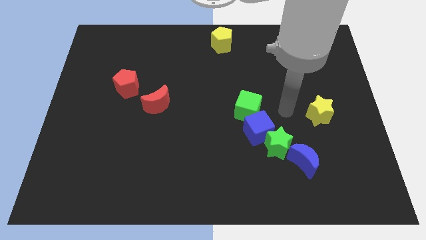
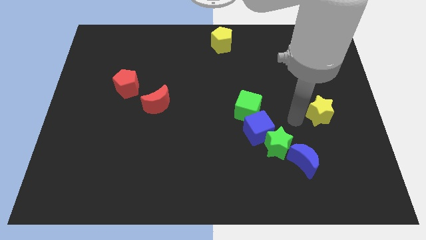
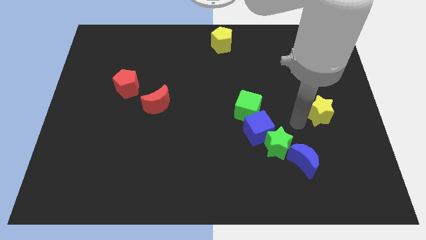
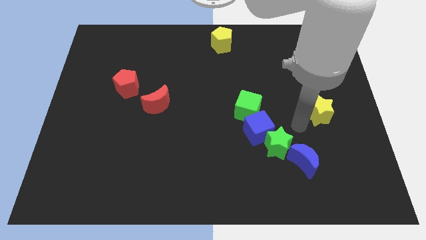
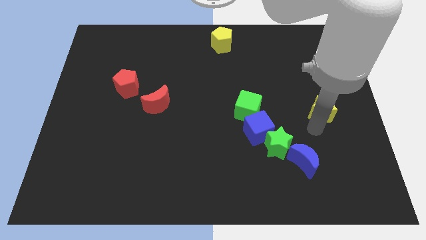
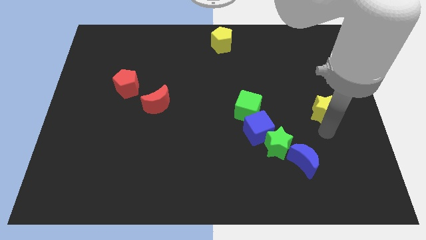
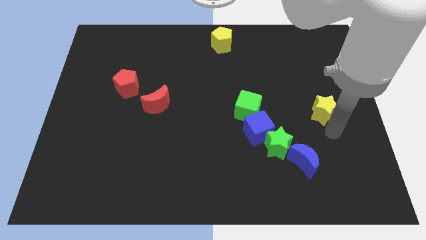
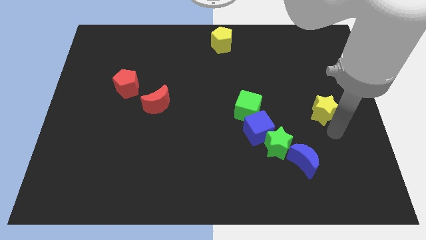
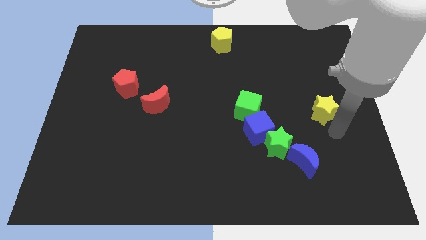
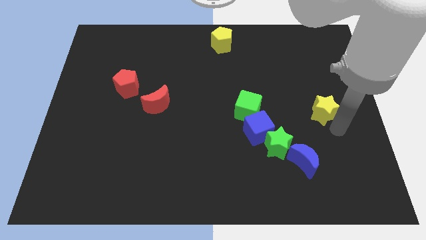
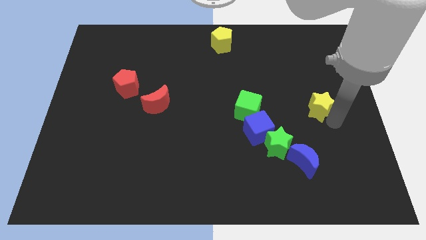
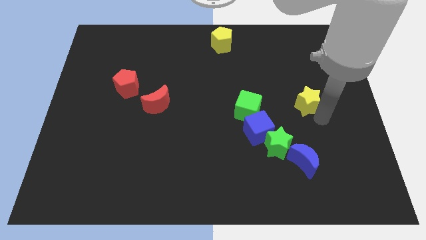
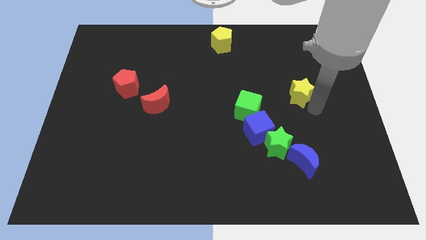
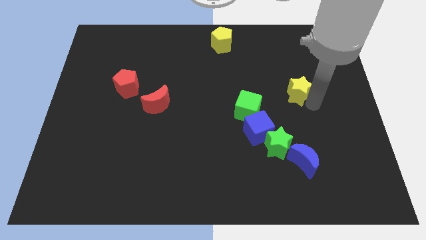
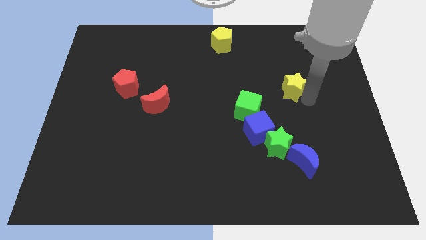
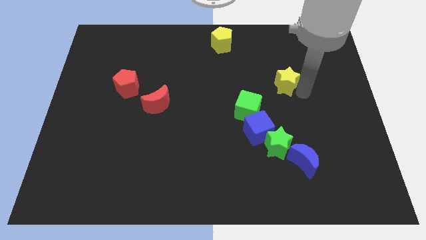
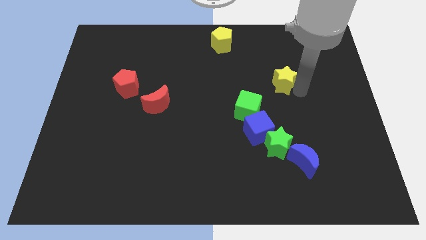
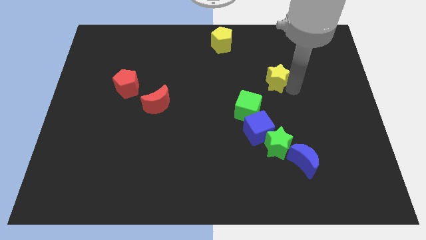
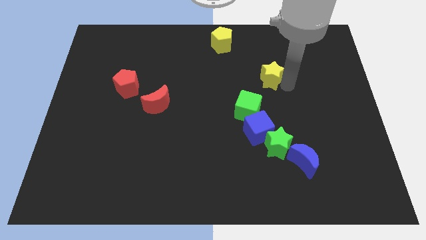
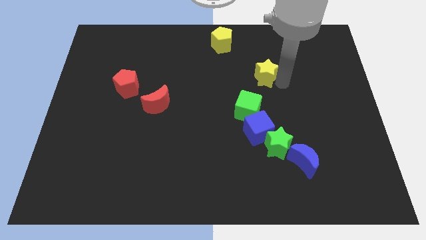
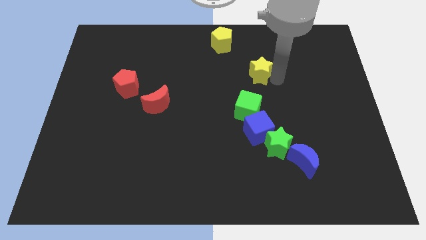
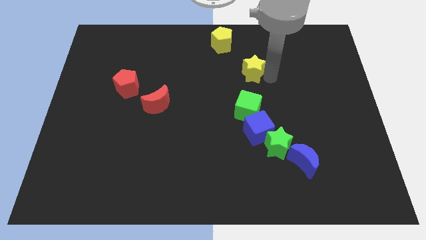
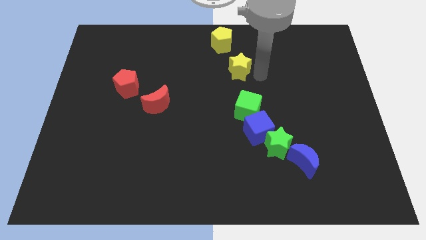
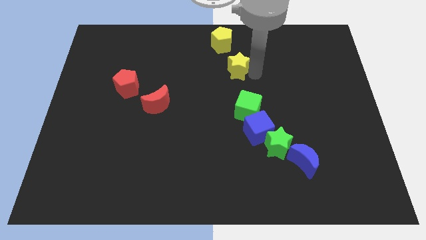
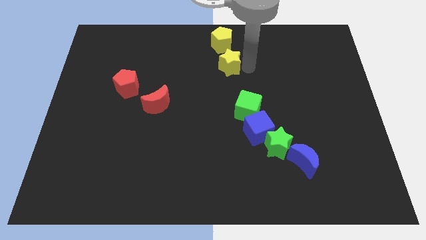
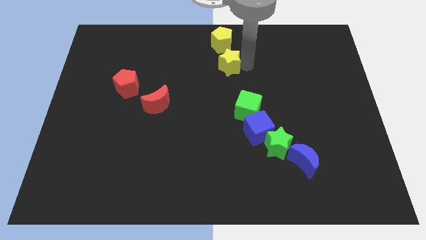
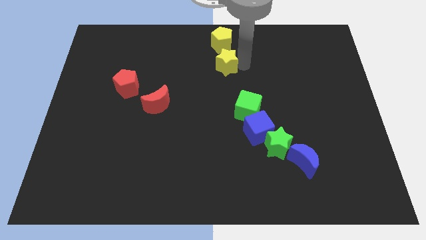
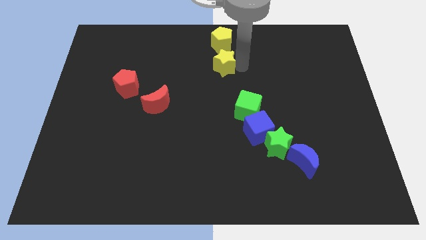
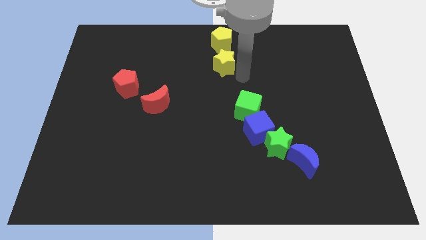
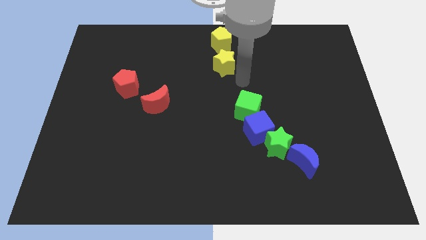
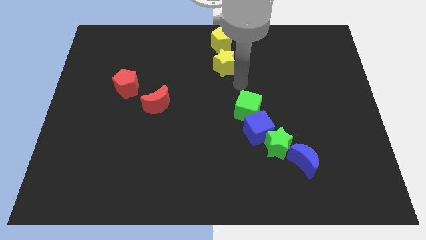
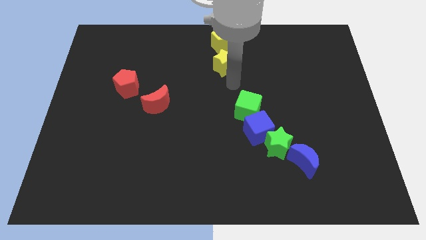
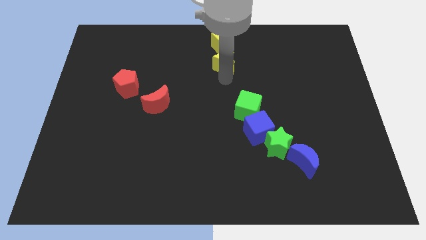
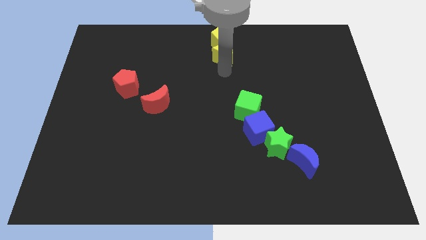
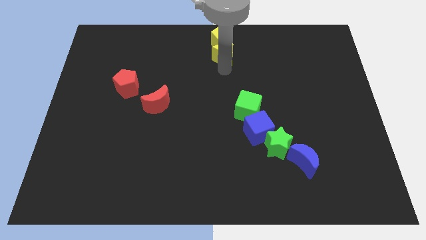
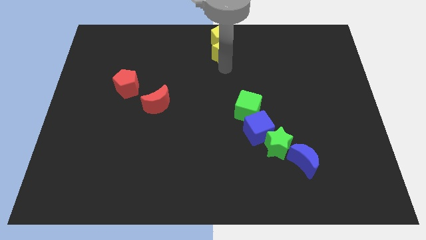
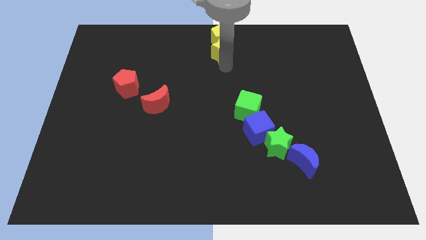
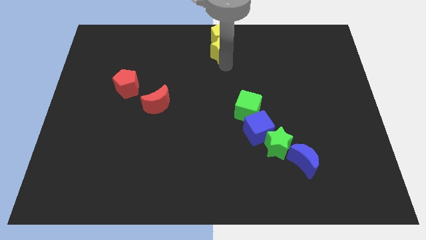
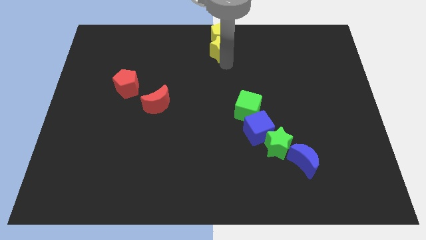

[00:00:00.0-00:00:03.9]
move the yellow star below the yellow pentagon

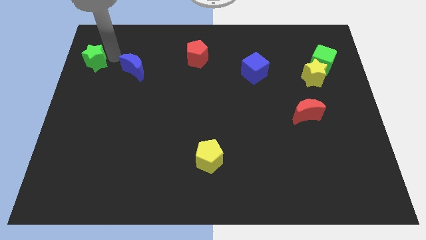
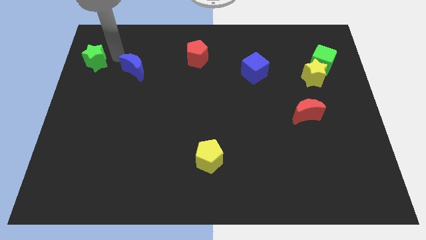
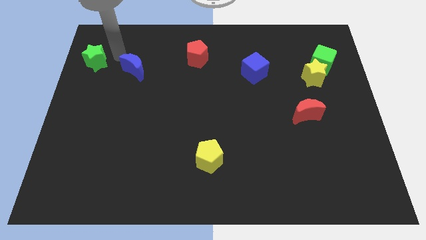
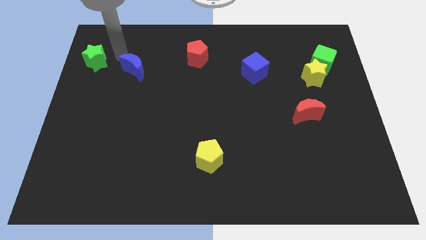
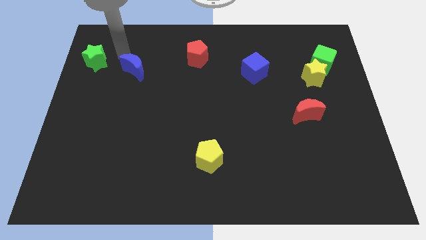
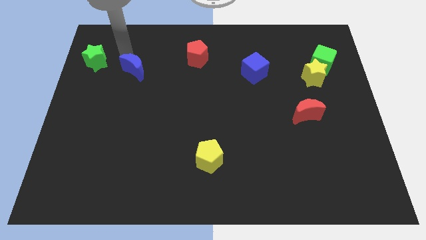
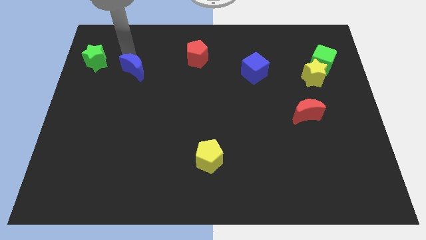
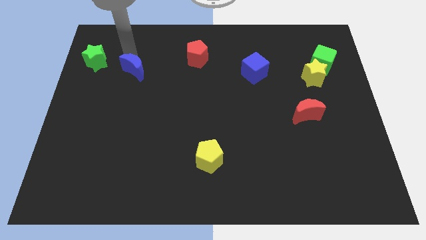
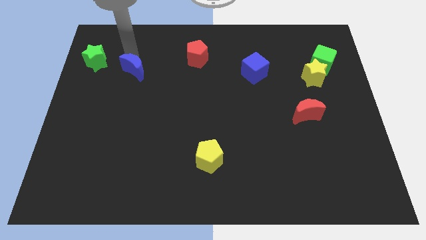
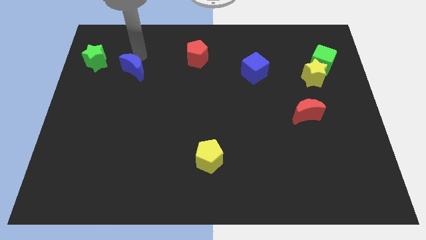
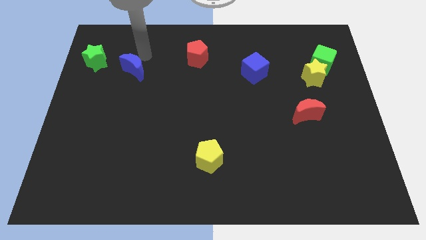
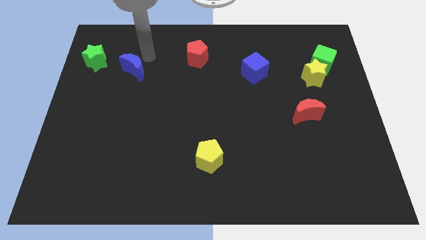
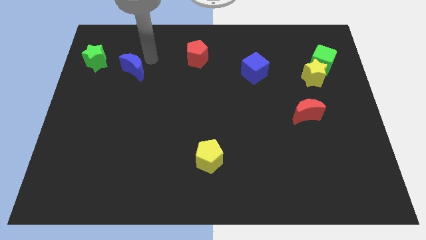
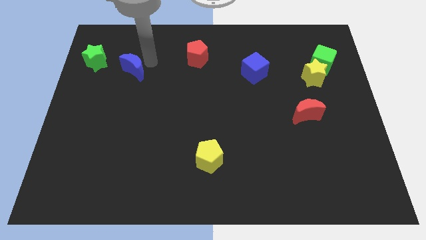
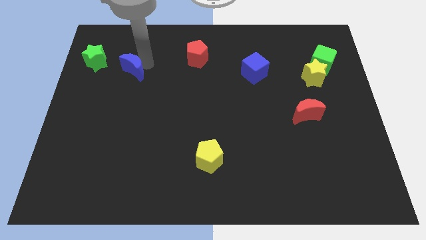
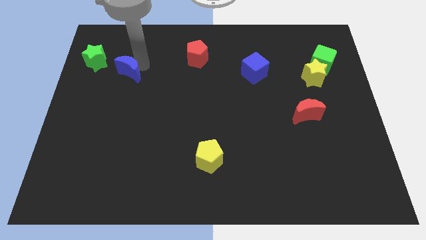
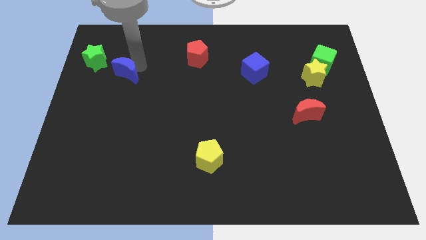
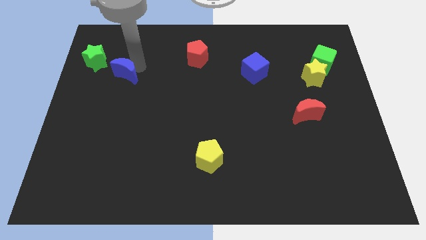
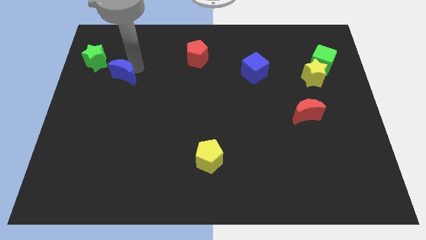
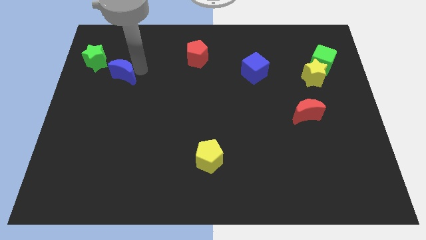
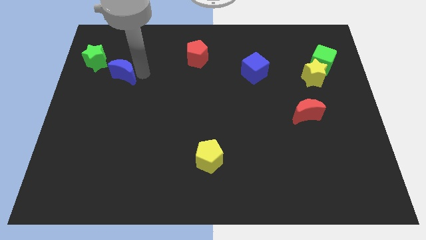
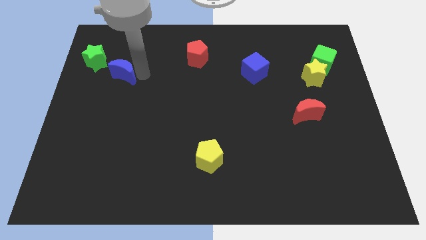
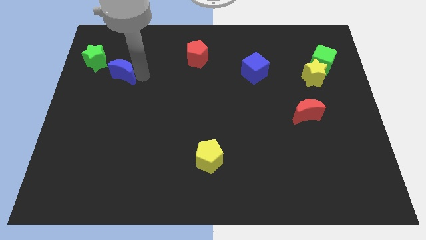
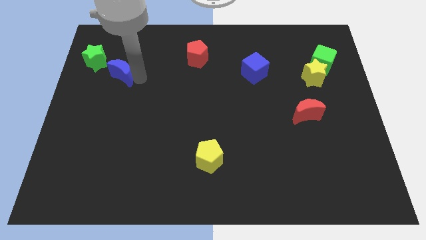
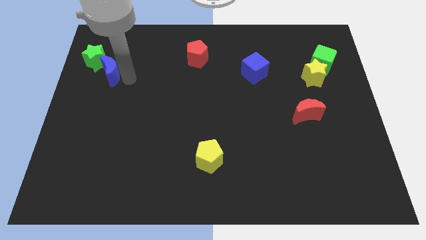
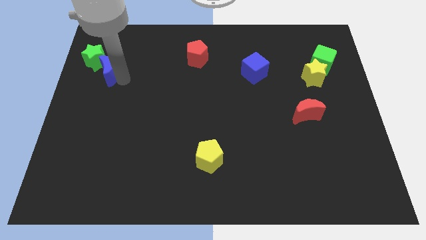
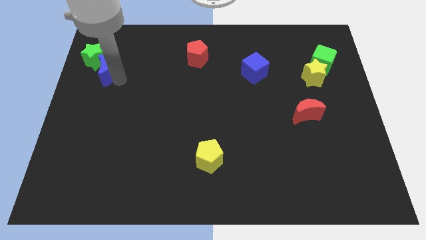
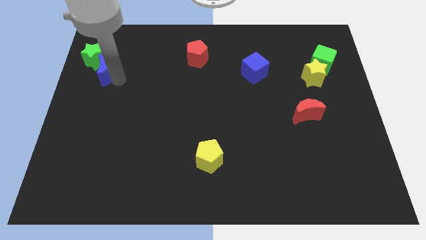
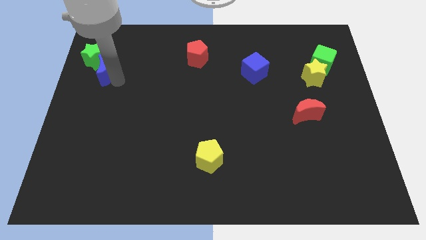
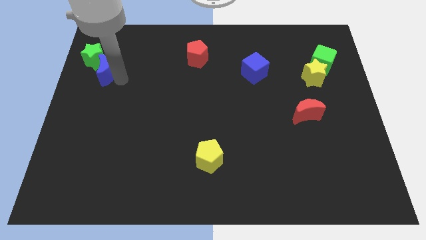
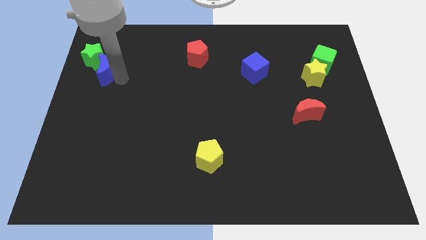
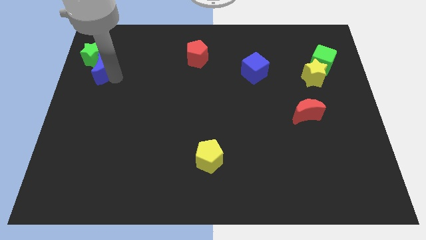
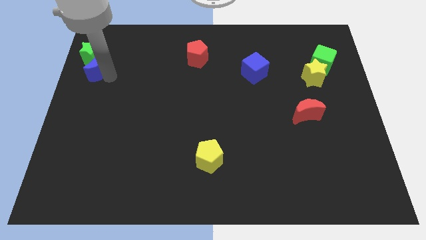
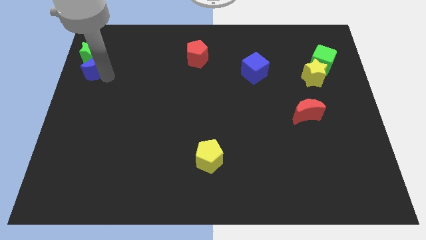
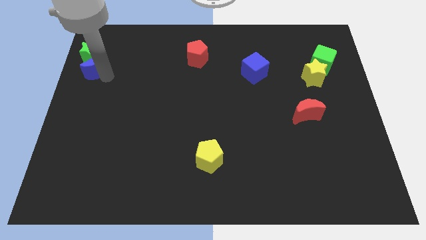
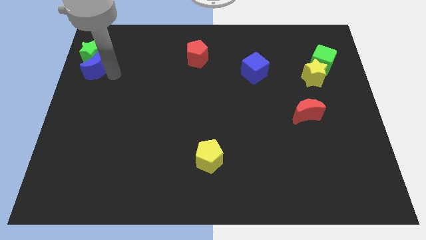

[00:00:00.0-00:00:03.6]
push the blue crescent into the bottom of the green star

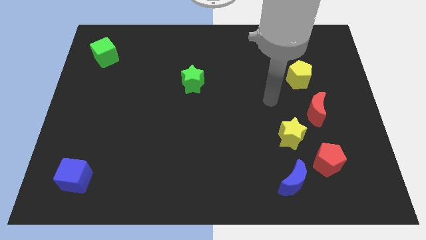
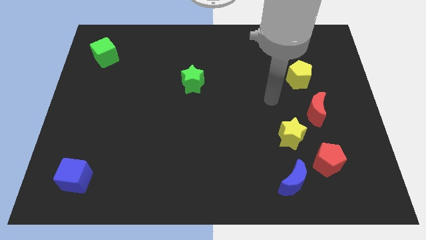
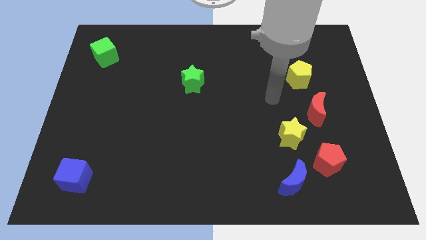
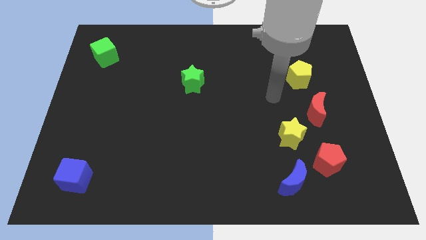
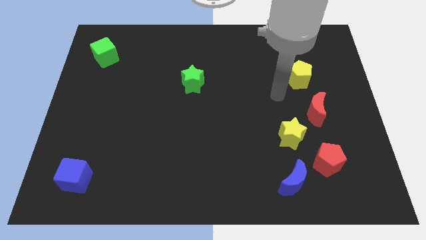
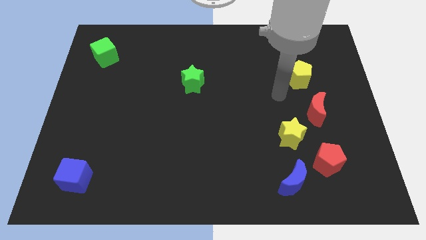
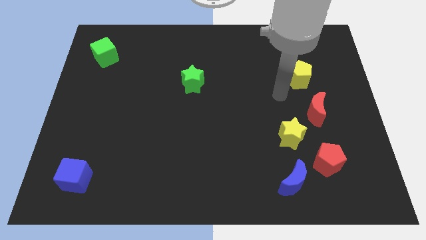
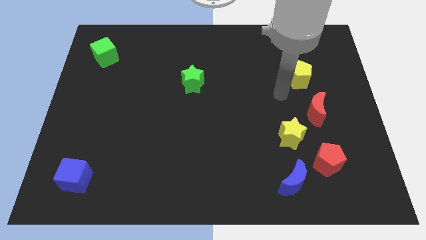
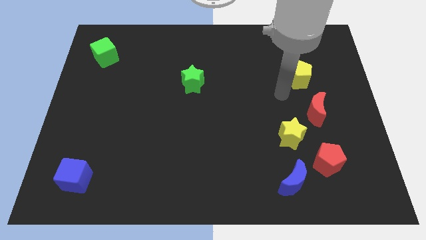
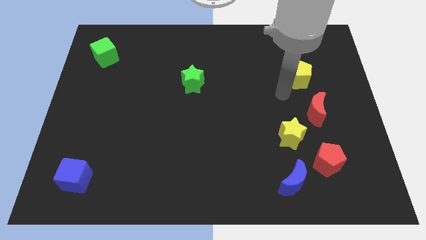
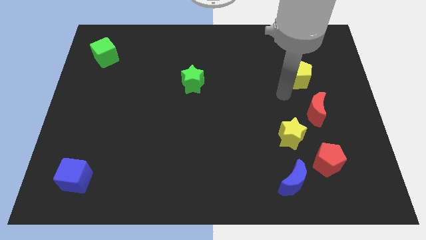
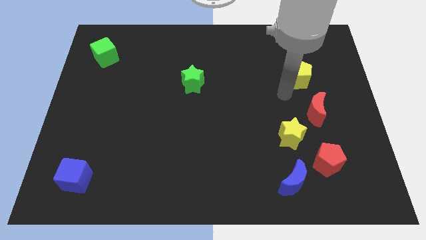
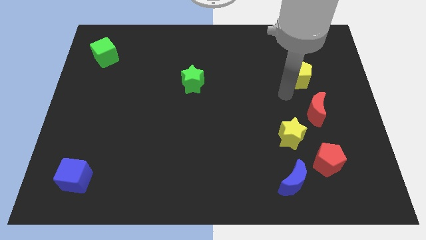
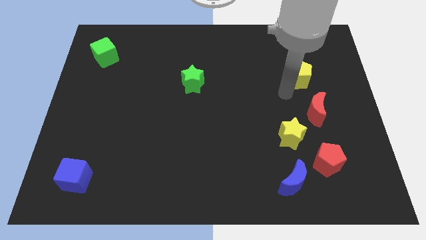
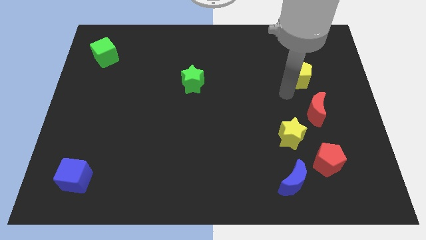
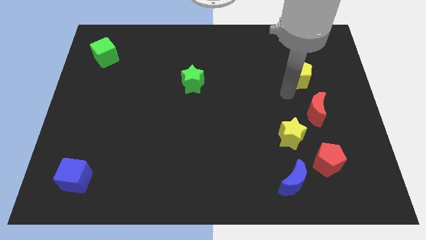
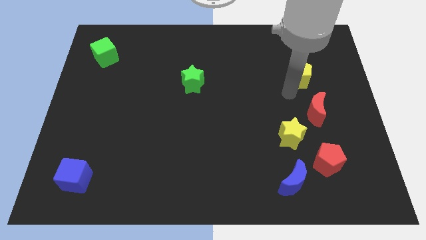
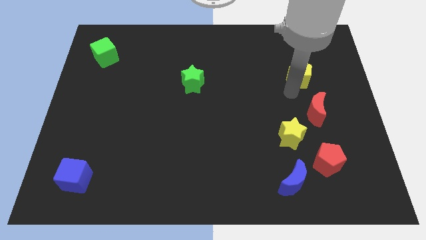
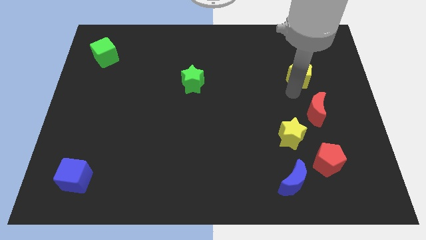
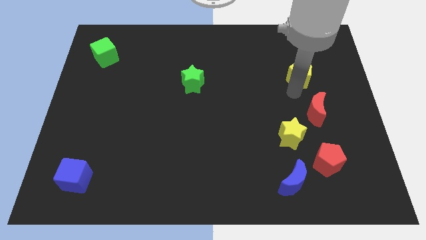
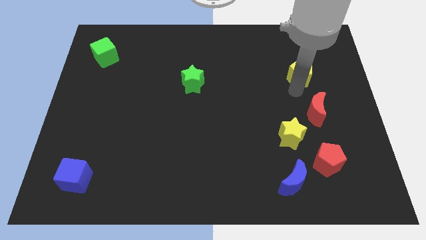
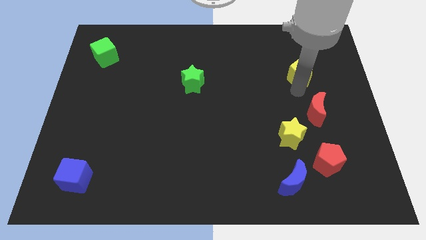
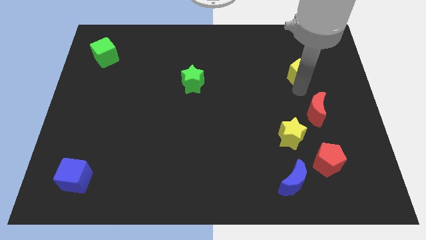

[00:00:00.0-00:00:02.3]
tap the bottom side of the yellow pentagon
